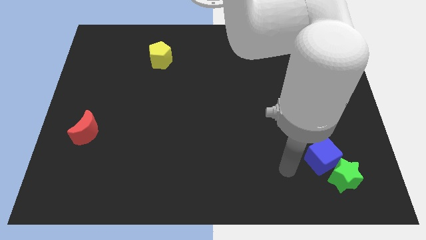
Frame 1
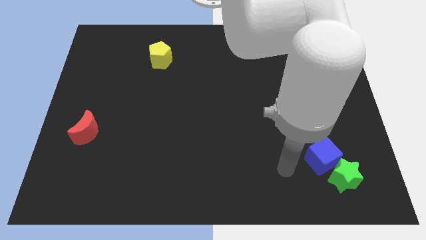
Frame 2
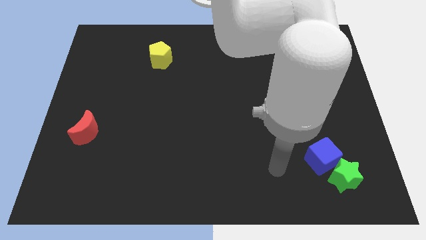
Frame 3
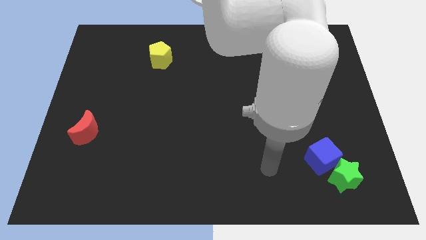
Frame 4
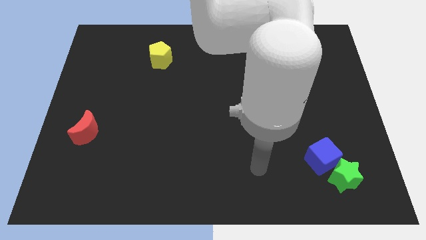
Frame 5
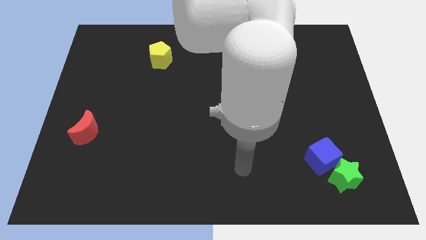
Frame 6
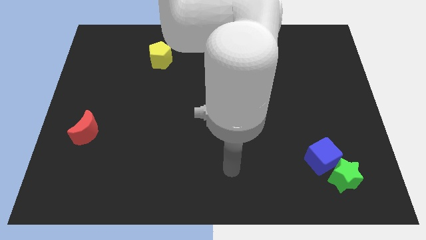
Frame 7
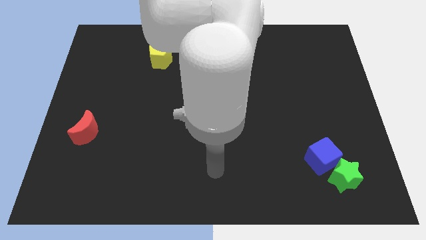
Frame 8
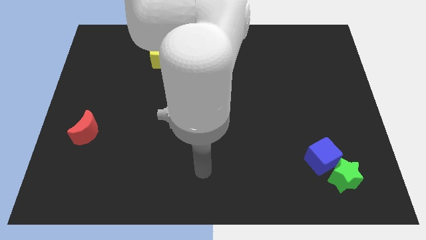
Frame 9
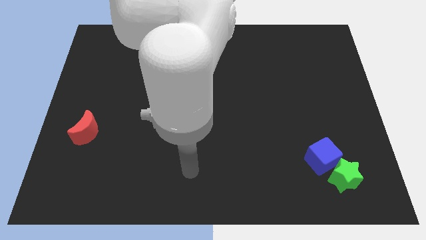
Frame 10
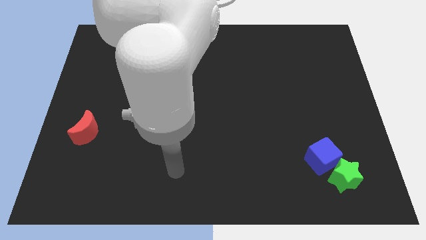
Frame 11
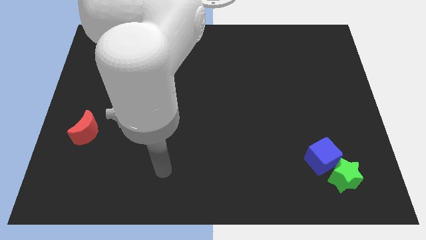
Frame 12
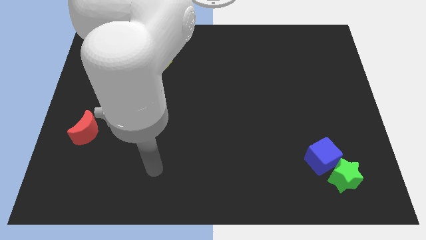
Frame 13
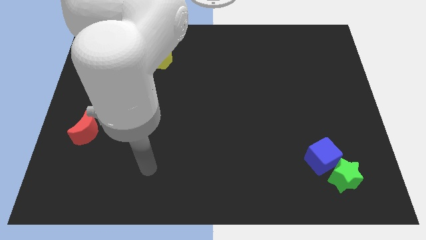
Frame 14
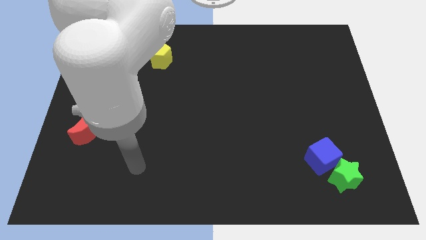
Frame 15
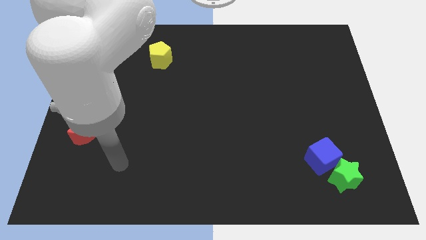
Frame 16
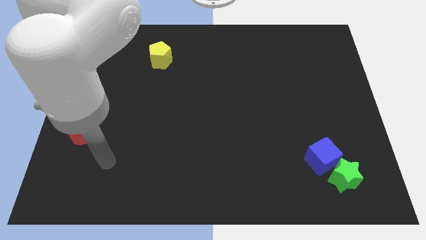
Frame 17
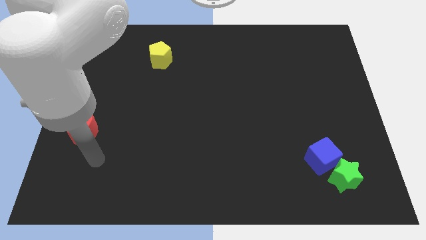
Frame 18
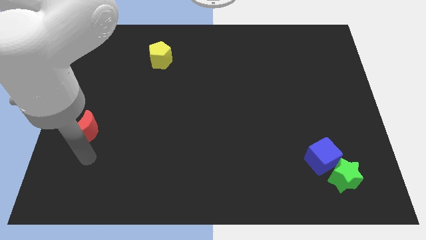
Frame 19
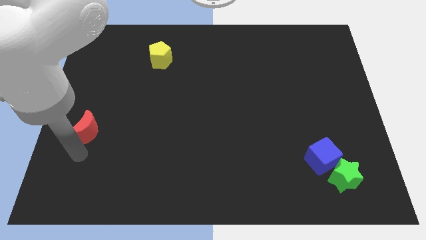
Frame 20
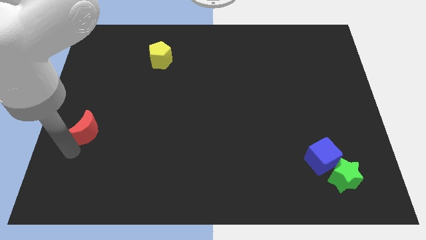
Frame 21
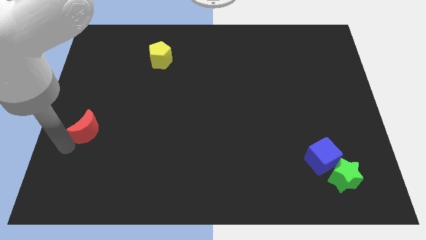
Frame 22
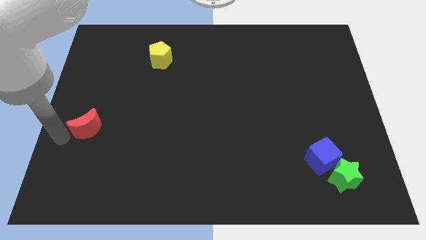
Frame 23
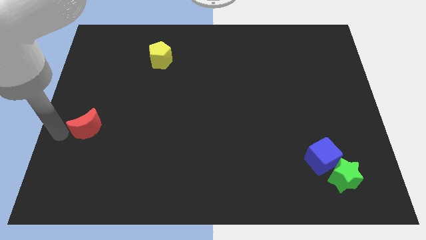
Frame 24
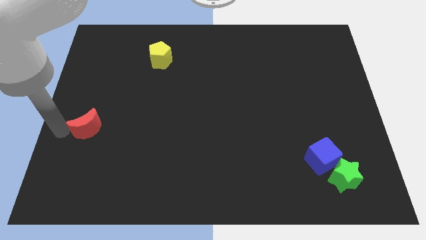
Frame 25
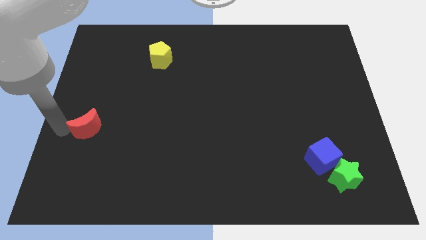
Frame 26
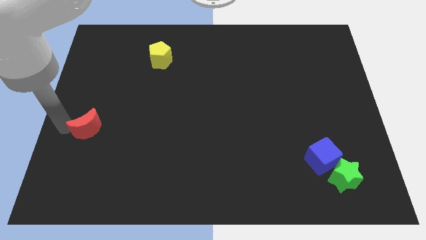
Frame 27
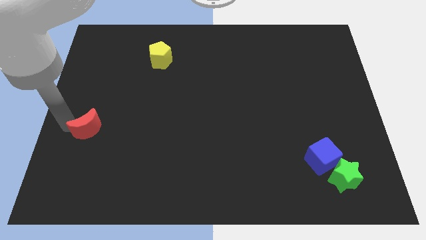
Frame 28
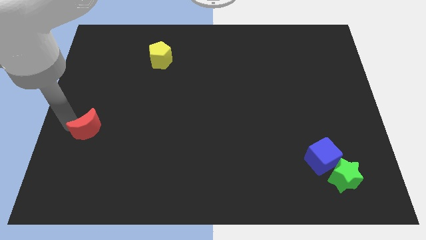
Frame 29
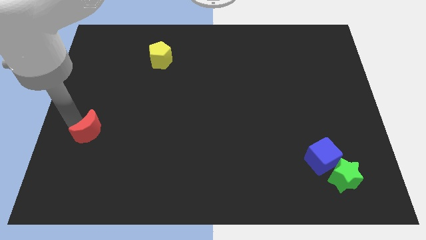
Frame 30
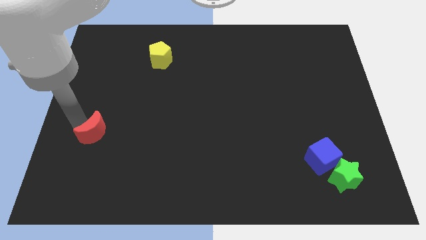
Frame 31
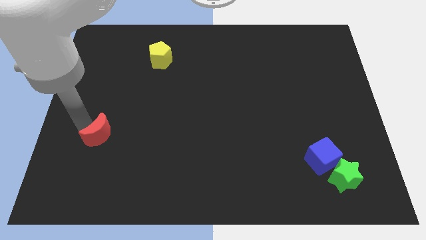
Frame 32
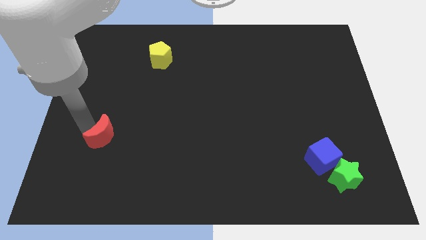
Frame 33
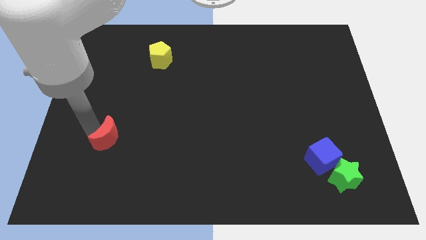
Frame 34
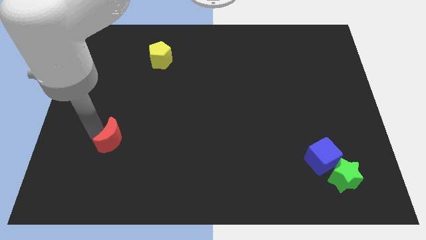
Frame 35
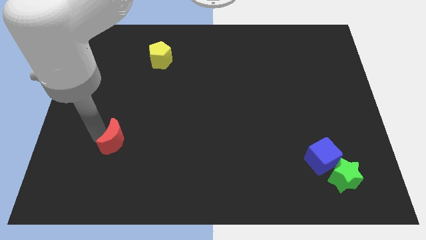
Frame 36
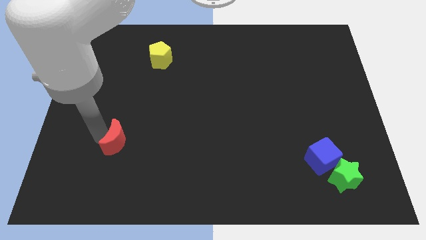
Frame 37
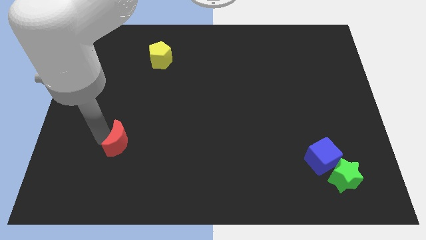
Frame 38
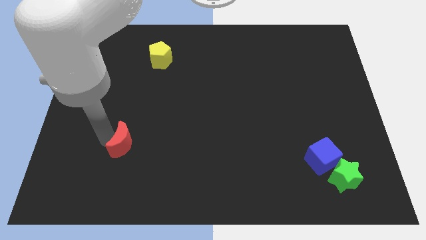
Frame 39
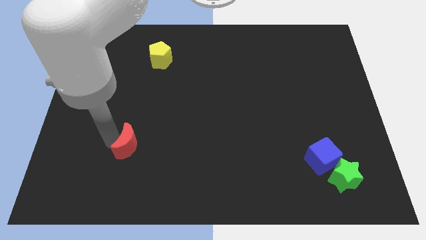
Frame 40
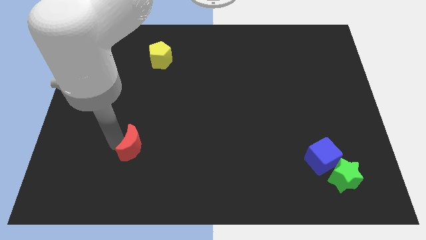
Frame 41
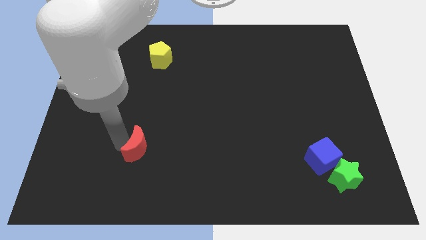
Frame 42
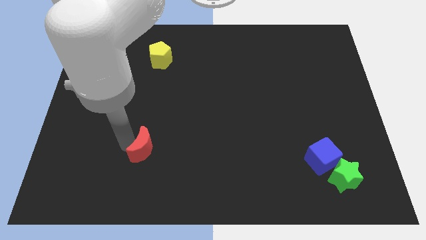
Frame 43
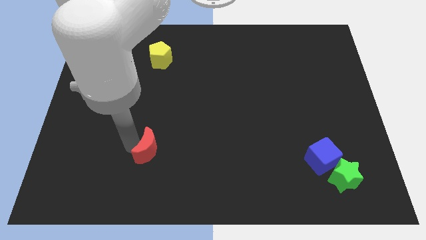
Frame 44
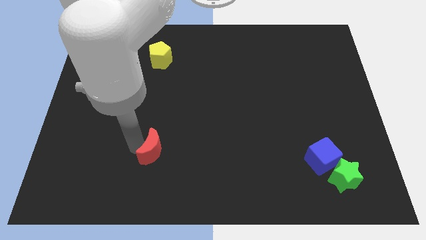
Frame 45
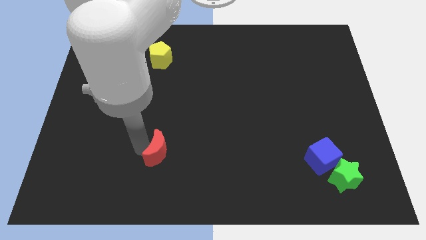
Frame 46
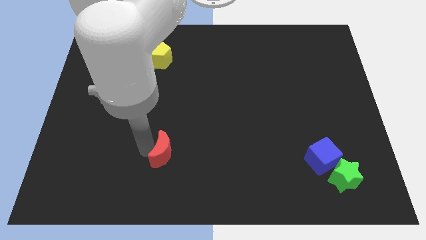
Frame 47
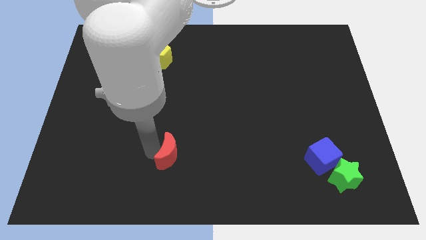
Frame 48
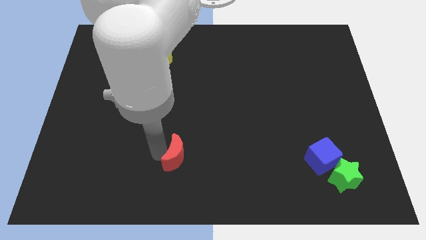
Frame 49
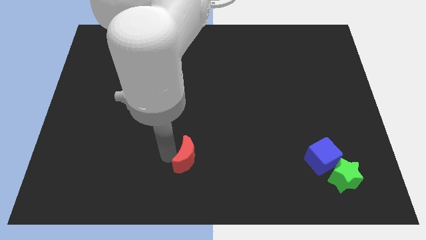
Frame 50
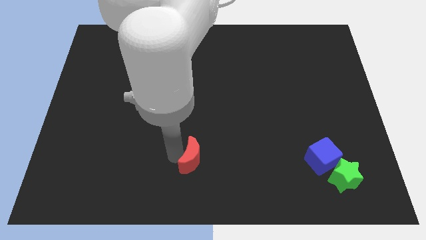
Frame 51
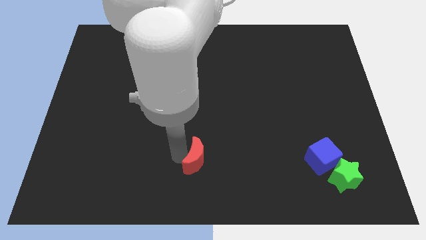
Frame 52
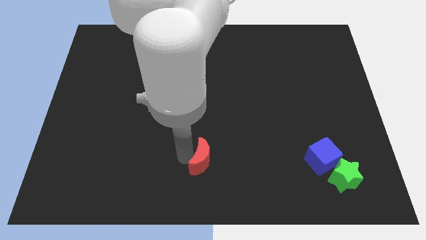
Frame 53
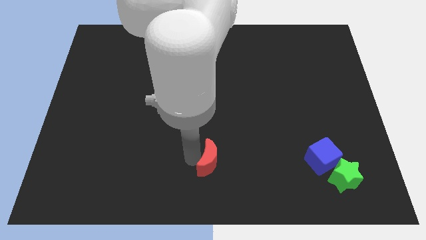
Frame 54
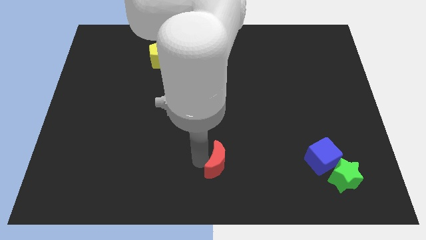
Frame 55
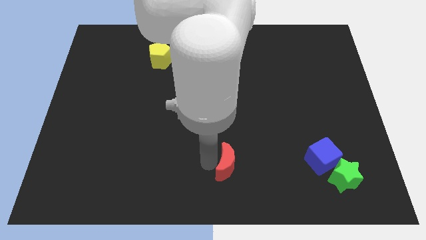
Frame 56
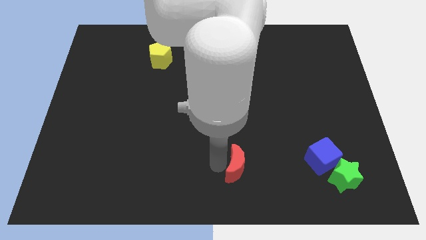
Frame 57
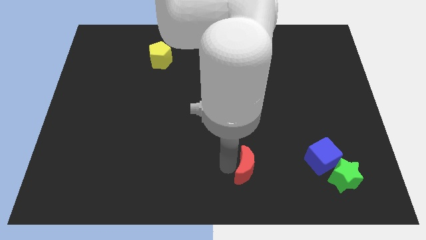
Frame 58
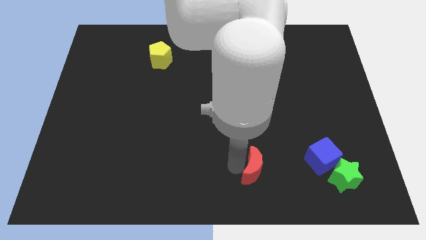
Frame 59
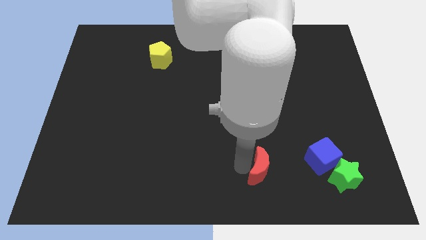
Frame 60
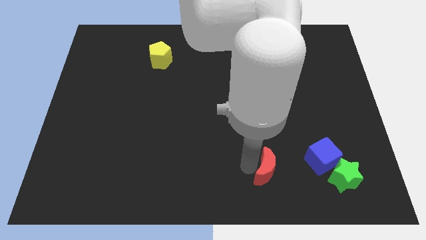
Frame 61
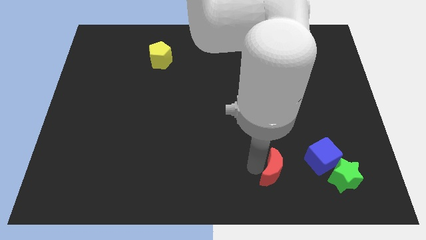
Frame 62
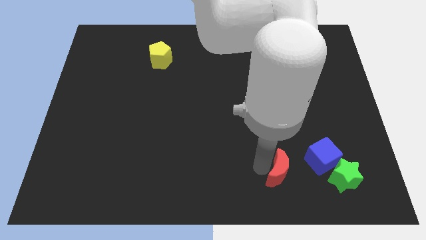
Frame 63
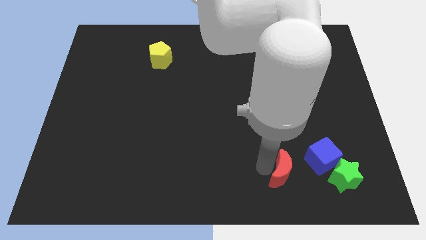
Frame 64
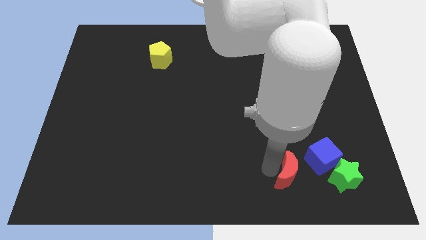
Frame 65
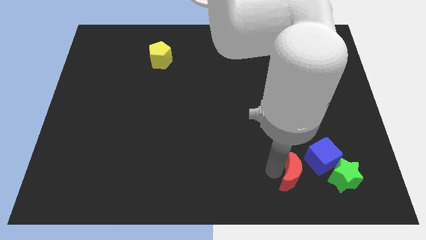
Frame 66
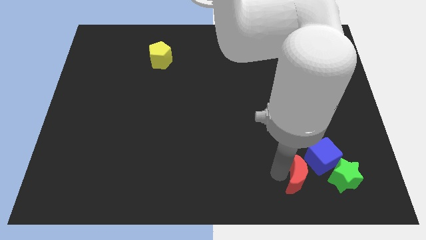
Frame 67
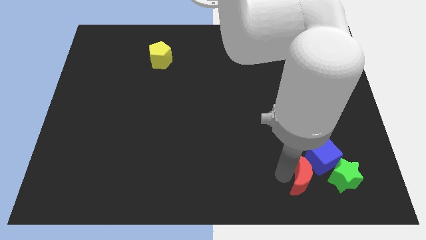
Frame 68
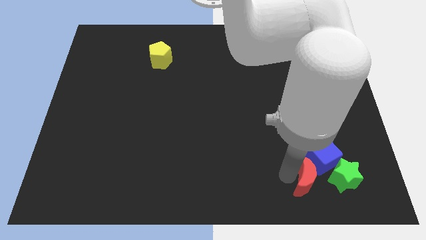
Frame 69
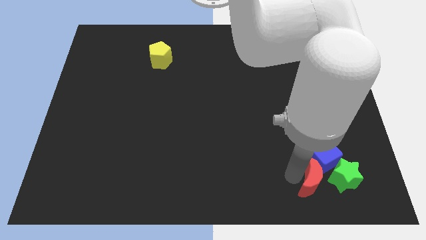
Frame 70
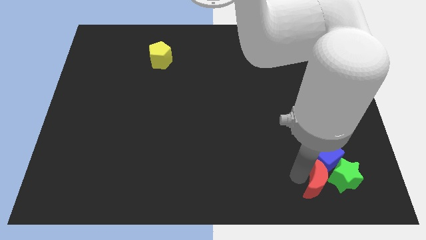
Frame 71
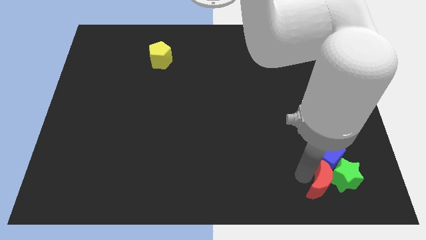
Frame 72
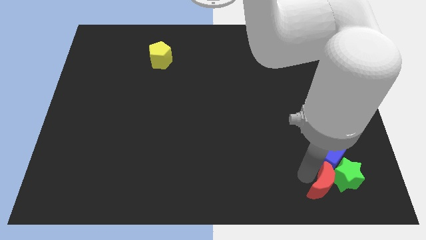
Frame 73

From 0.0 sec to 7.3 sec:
push the red moon to the green star

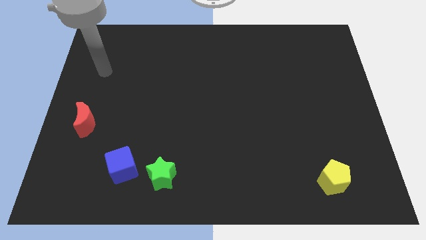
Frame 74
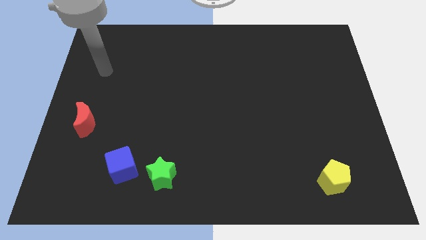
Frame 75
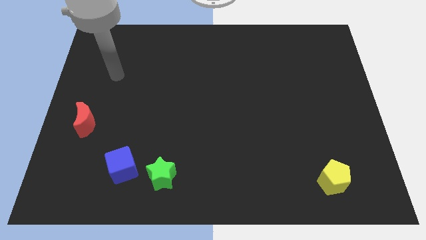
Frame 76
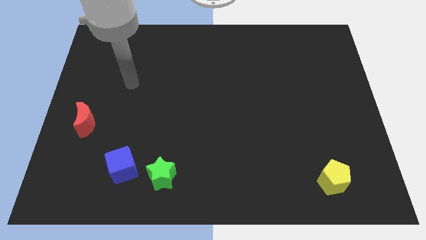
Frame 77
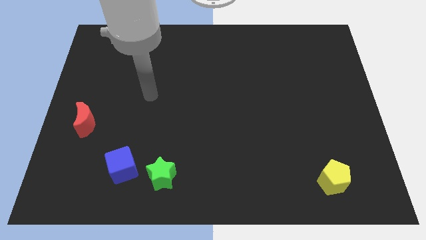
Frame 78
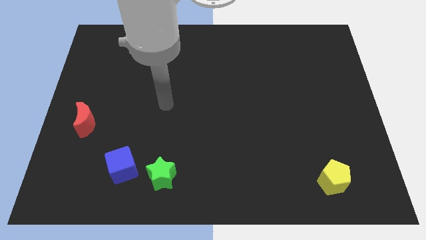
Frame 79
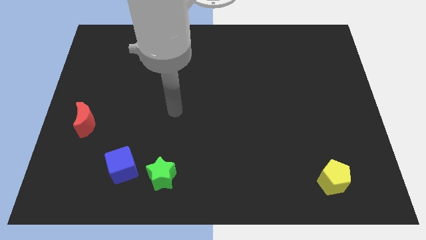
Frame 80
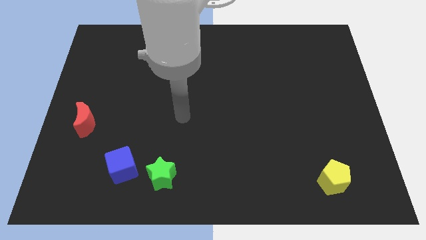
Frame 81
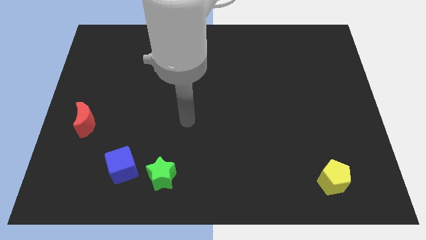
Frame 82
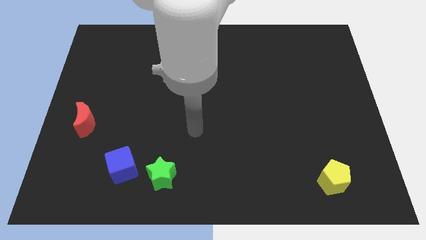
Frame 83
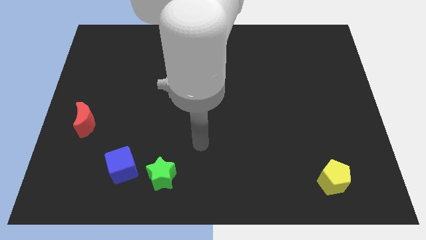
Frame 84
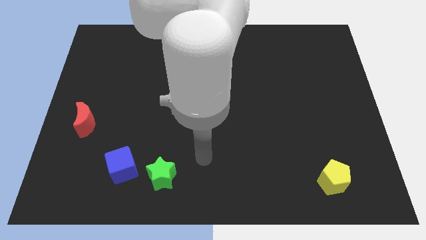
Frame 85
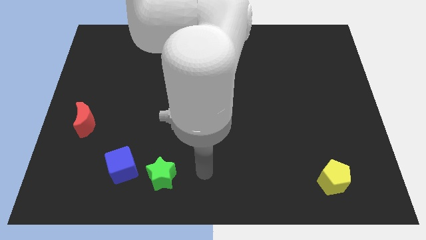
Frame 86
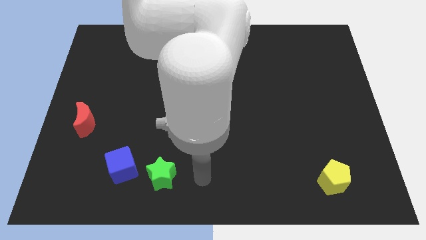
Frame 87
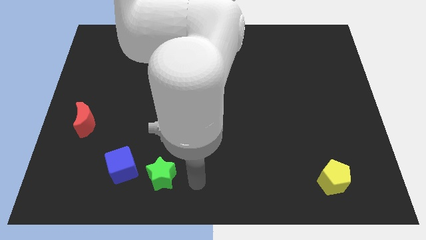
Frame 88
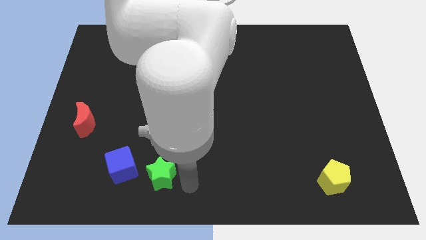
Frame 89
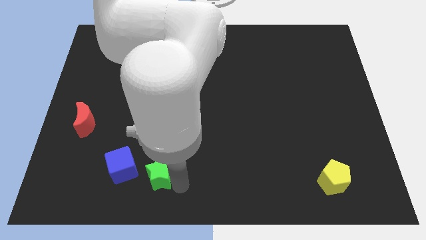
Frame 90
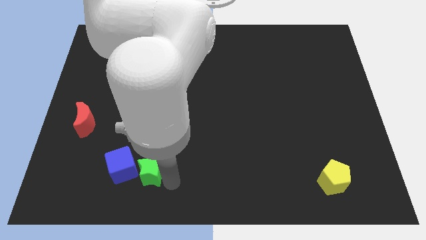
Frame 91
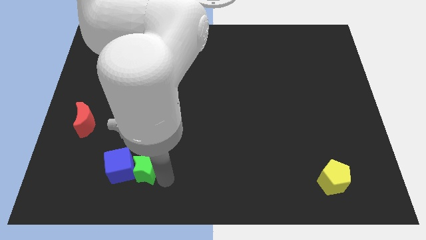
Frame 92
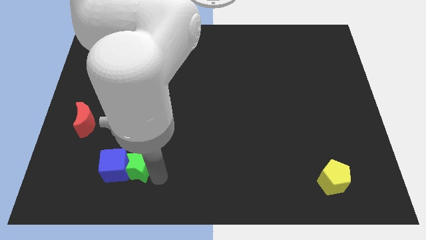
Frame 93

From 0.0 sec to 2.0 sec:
push the star close to the cube
